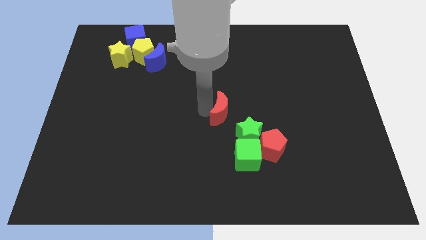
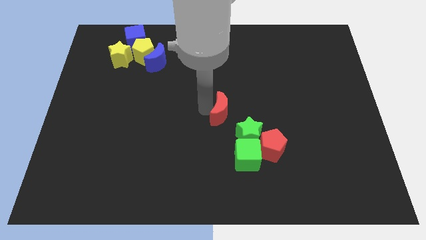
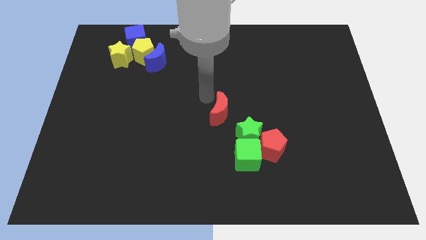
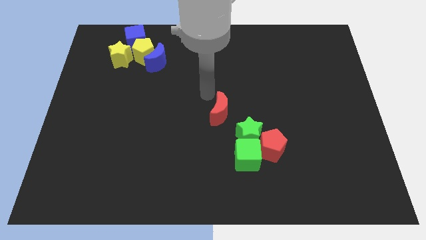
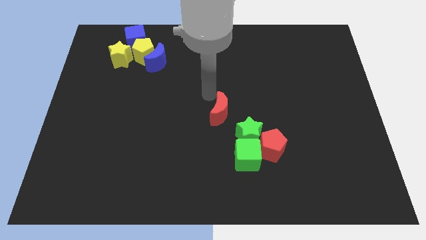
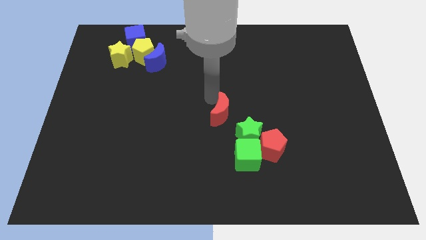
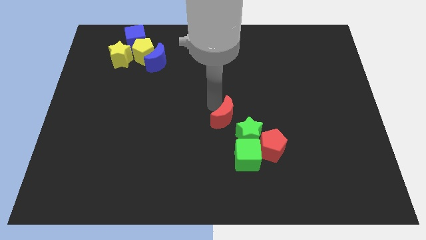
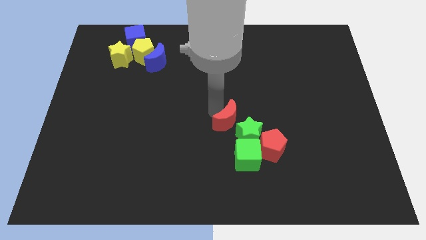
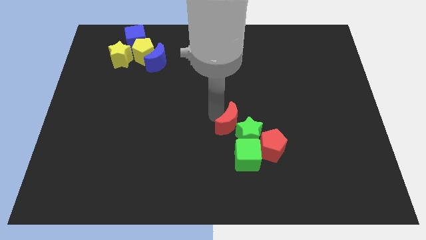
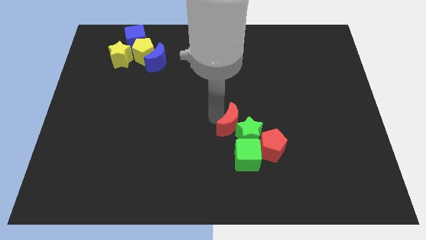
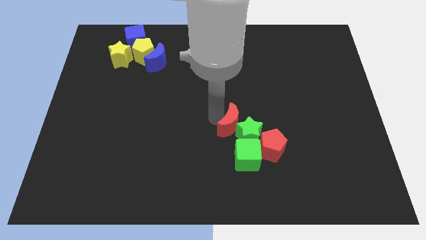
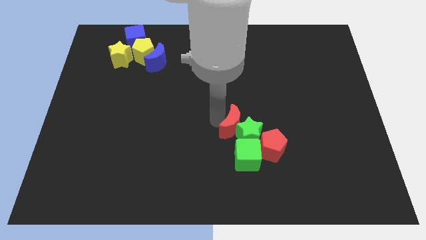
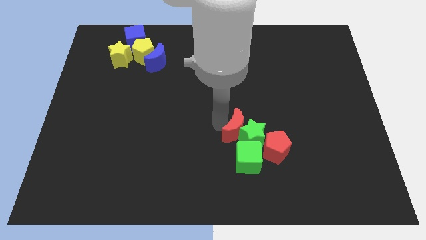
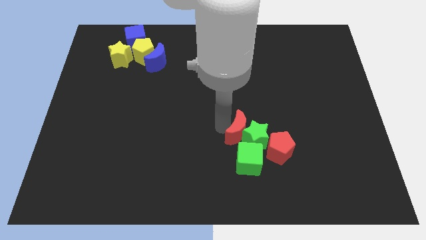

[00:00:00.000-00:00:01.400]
push the red moon into the green star

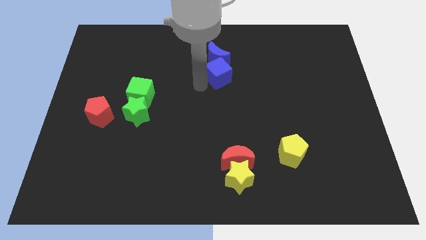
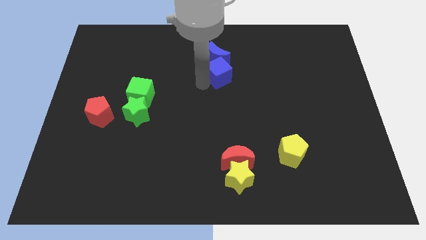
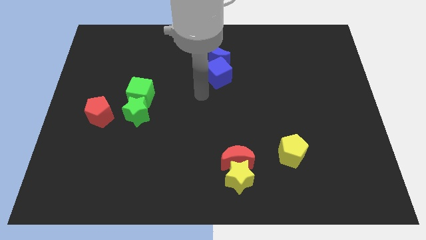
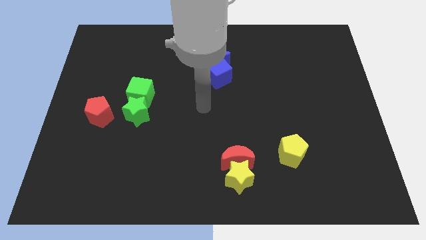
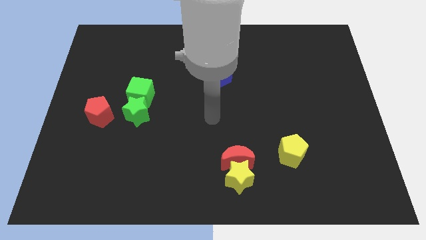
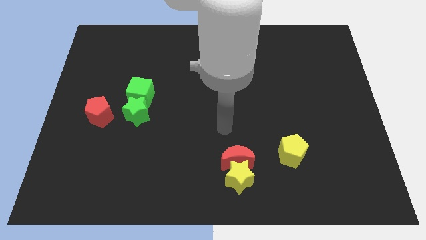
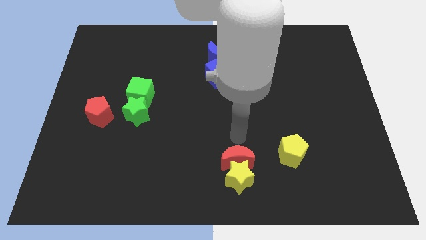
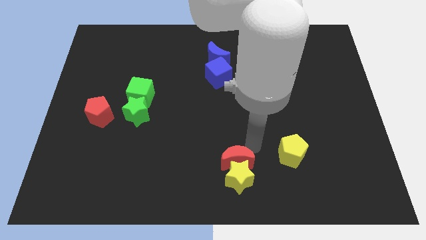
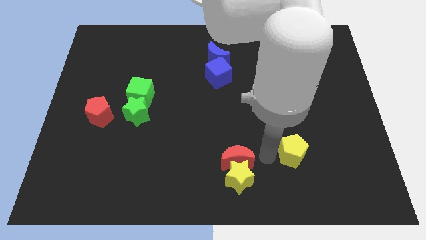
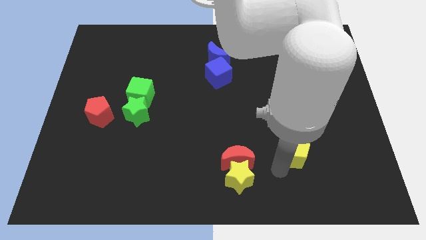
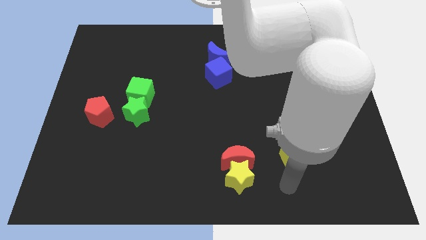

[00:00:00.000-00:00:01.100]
slightly push the yellow pentagon towards the right side of the board

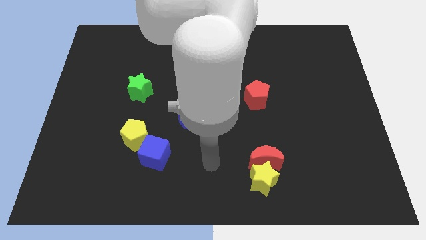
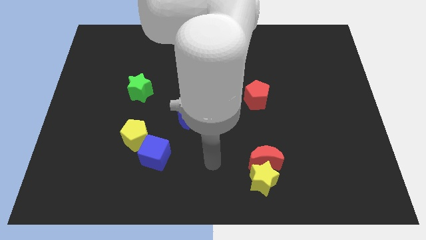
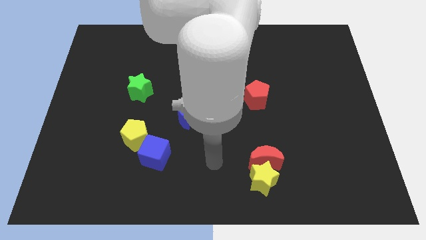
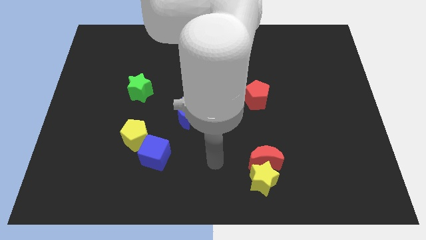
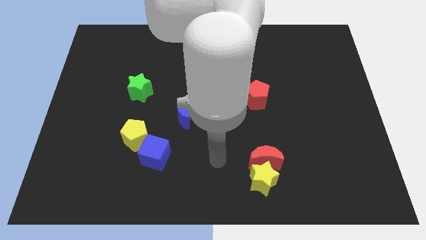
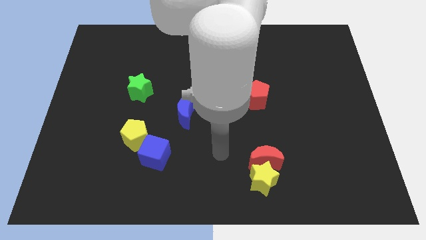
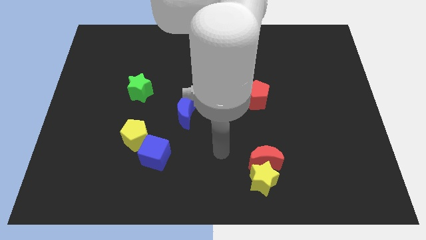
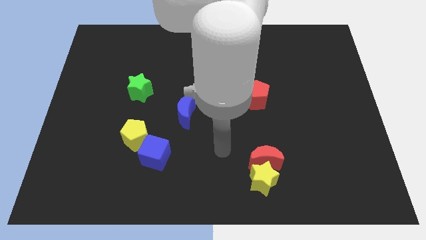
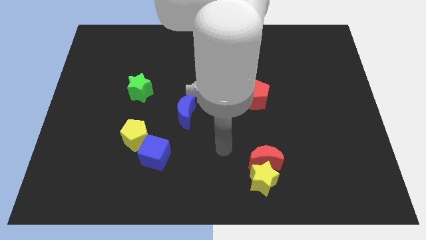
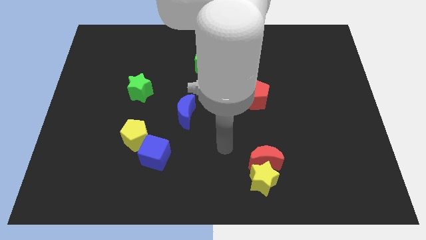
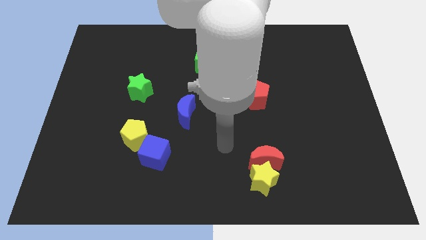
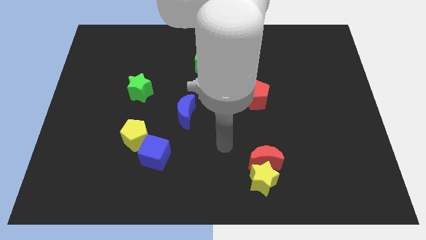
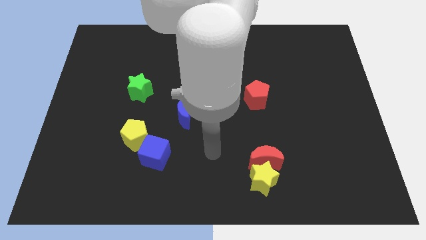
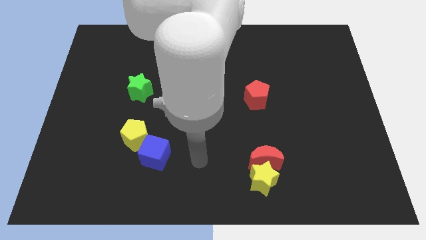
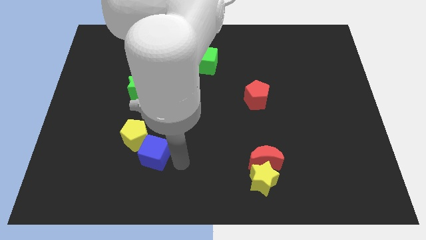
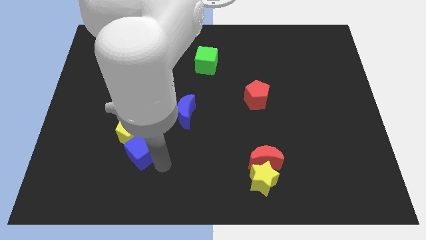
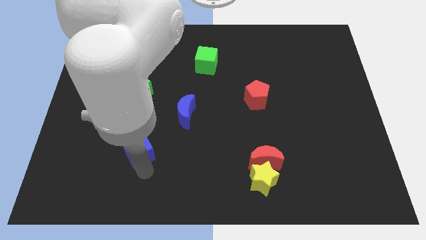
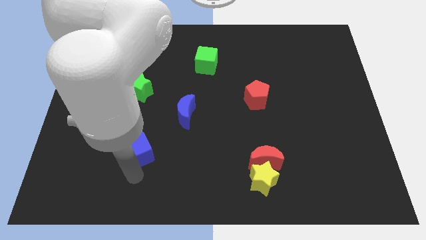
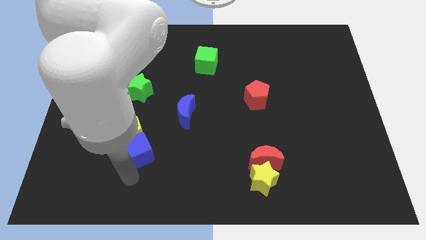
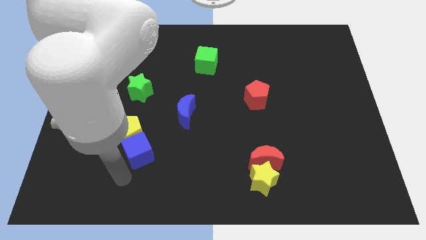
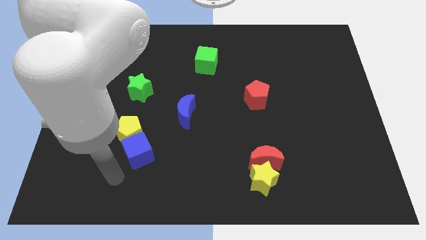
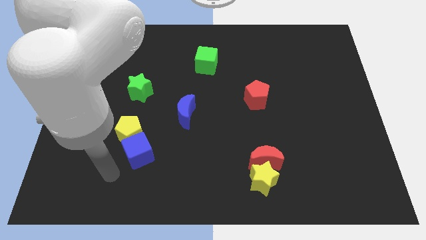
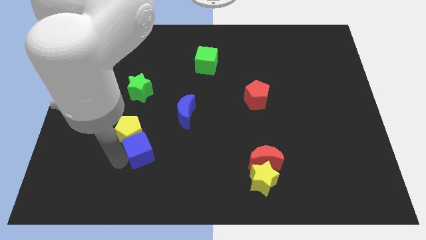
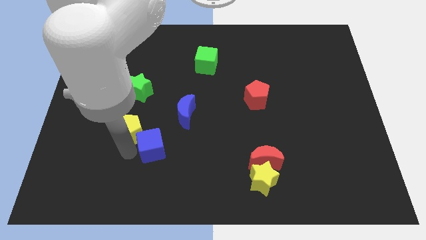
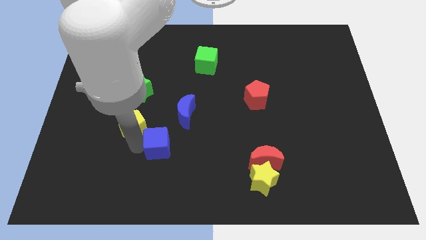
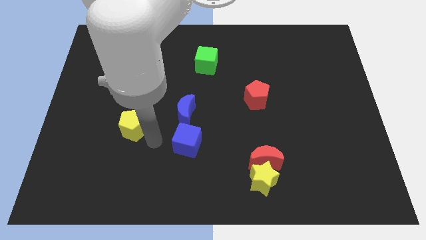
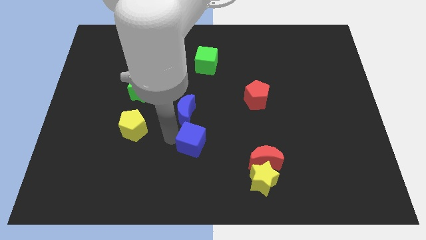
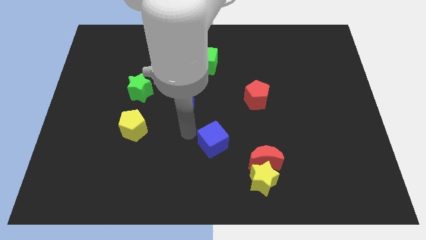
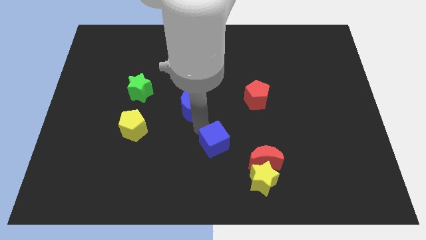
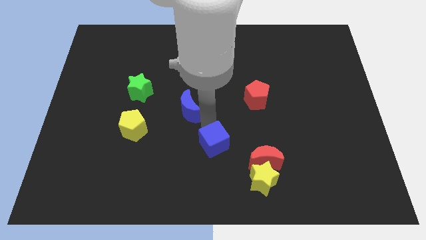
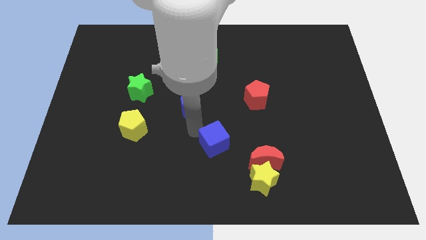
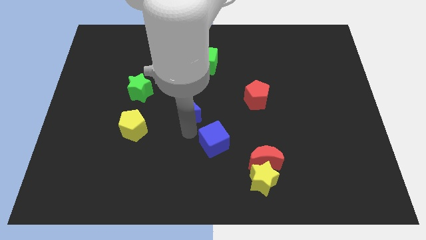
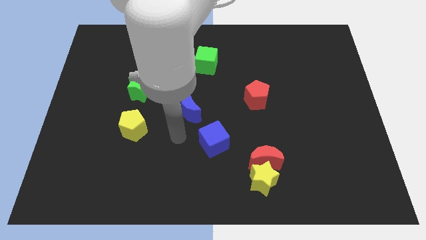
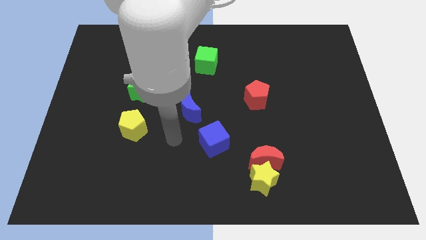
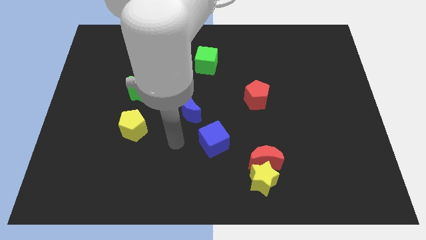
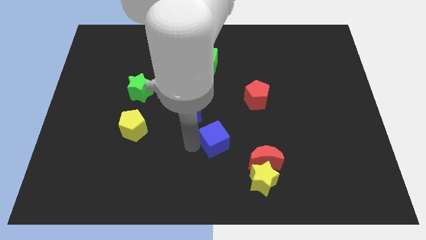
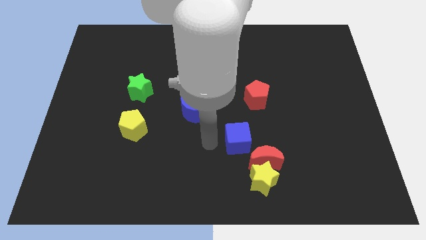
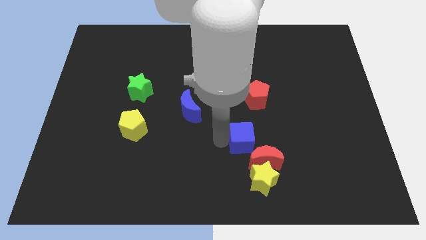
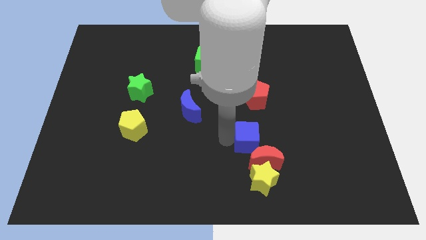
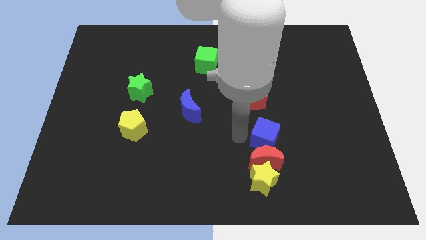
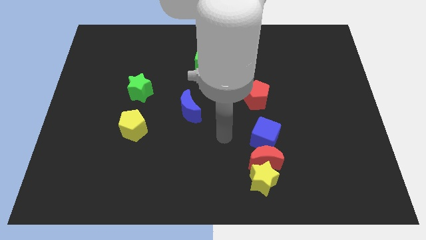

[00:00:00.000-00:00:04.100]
place the blue cube in between red crescent and red pentagon

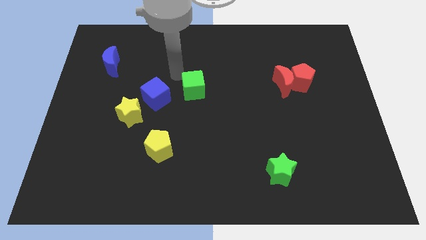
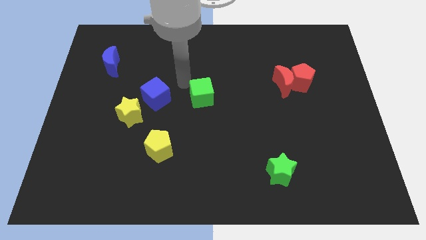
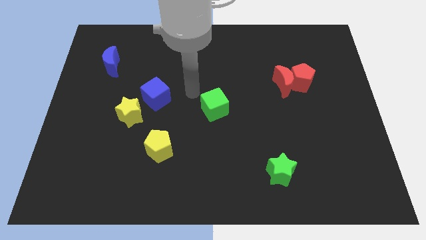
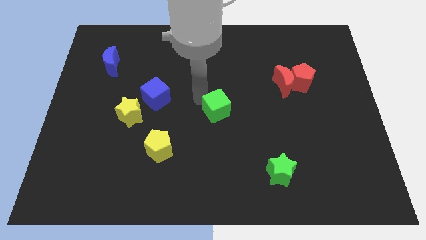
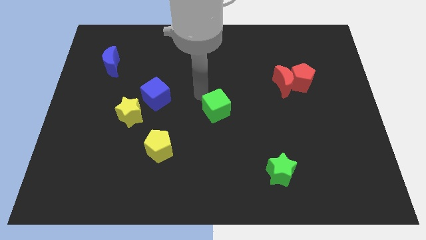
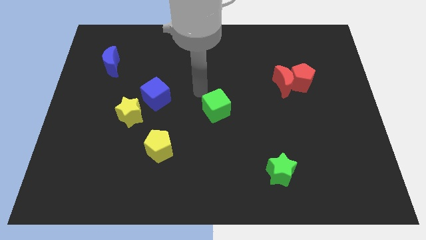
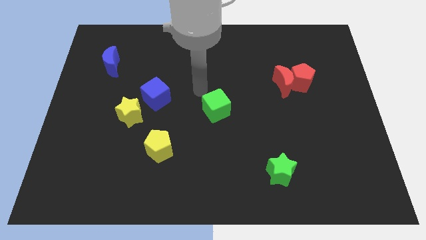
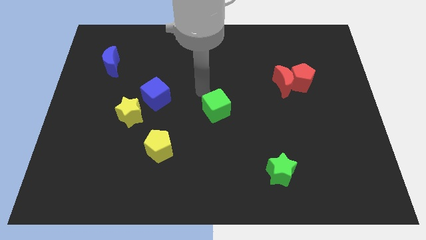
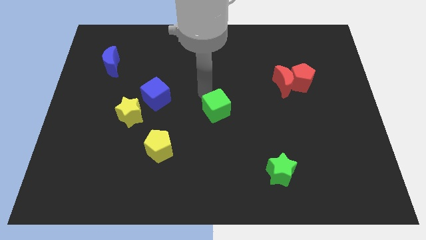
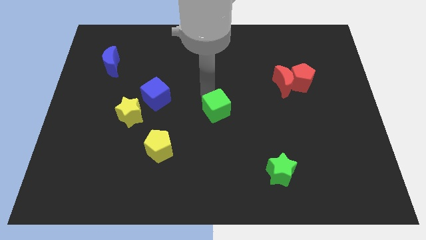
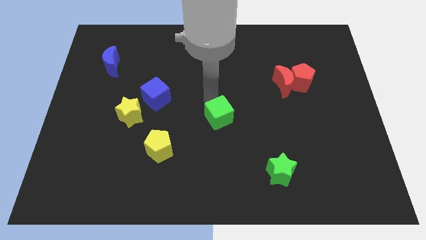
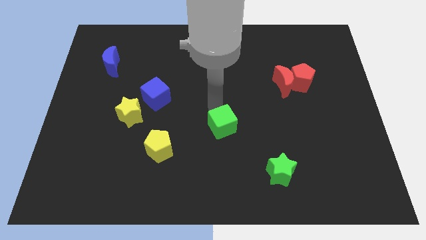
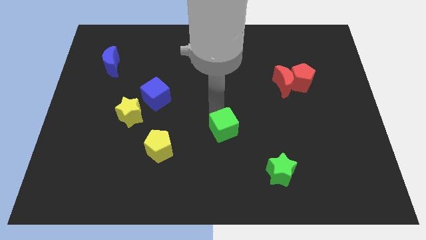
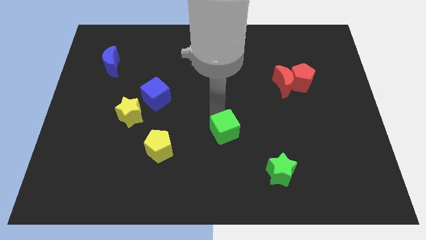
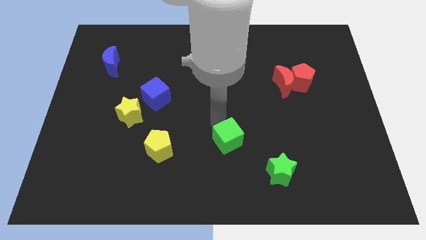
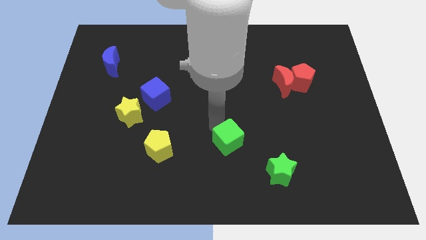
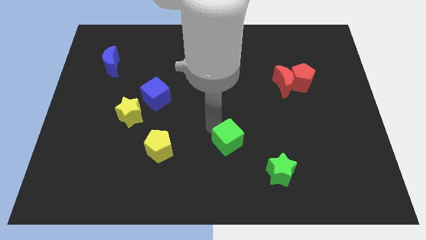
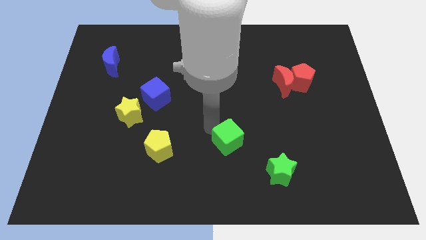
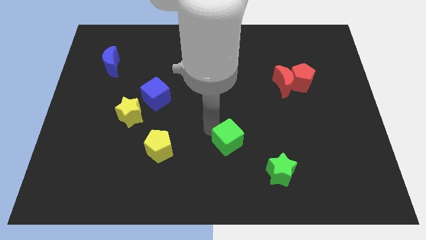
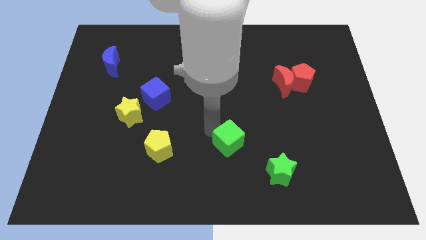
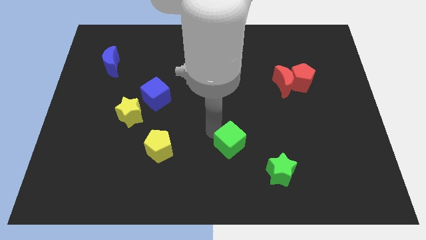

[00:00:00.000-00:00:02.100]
move the green block horizontally right to the yellow pentagon

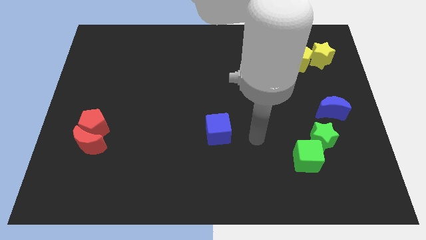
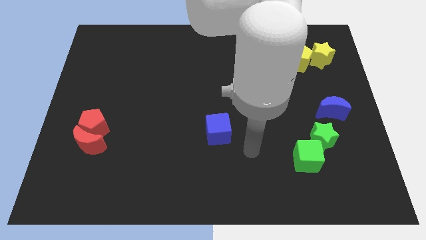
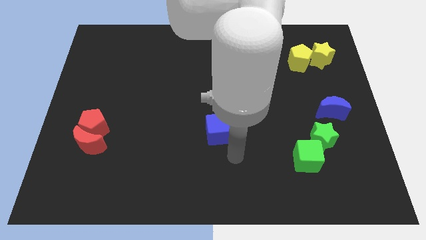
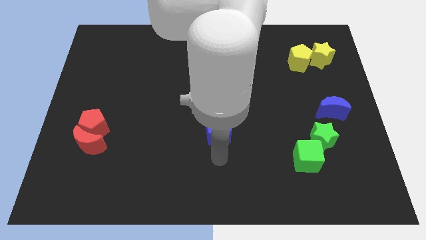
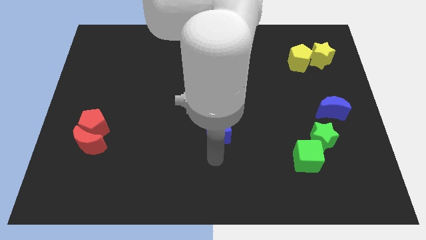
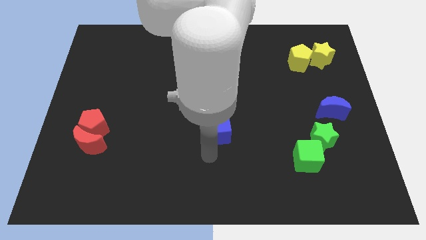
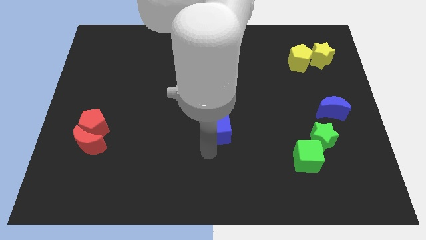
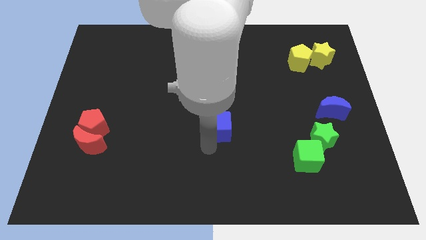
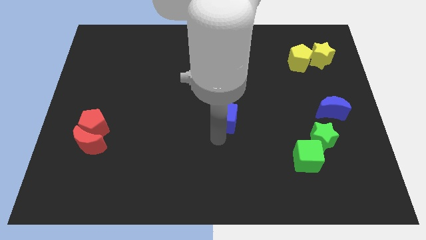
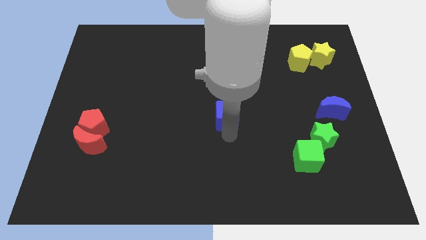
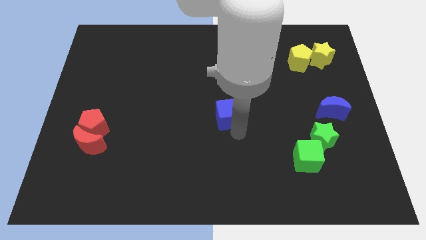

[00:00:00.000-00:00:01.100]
slightly move the blue cube towards the top side
